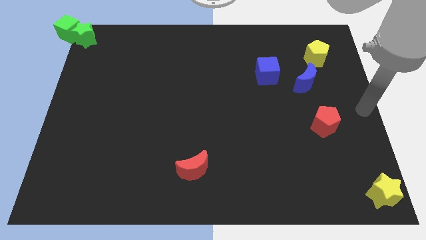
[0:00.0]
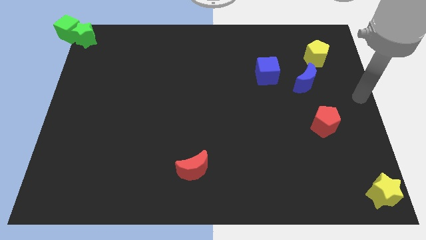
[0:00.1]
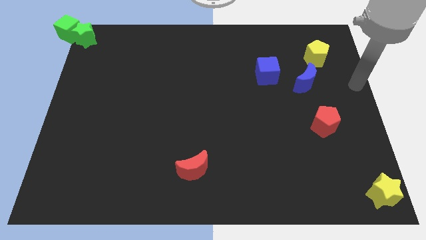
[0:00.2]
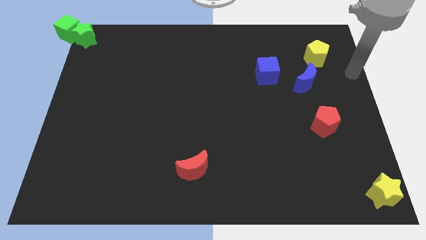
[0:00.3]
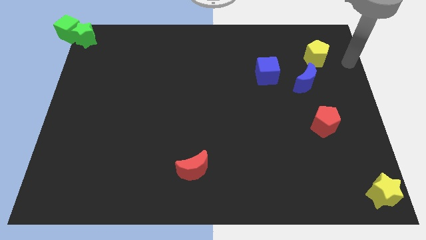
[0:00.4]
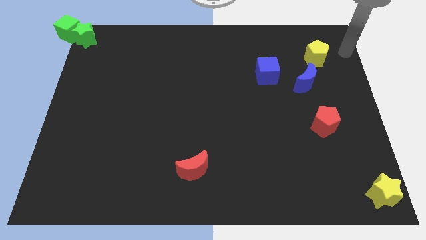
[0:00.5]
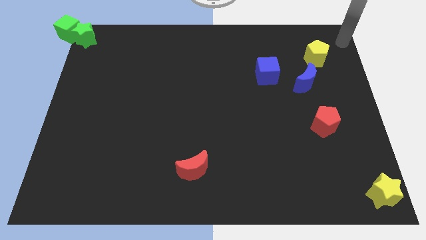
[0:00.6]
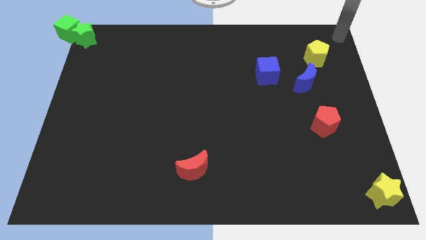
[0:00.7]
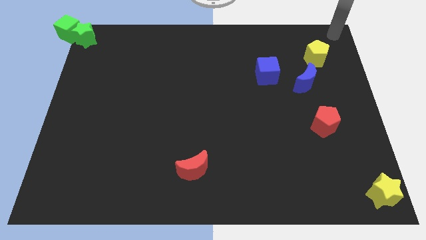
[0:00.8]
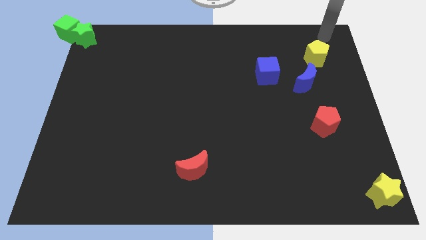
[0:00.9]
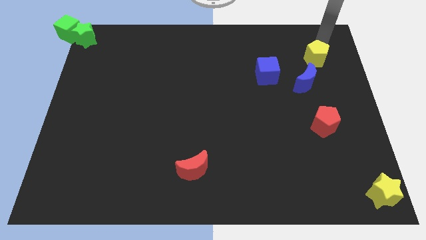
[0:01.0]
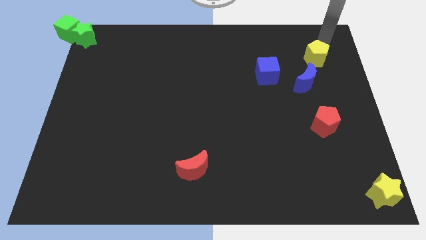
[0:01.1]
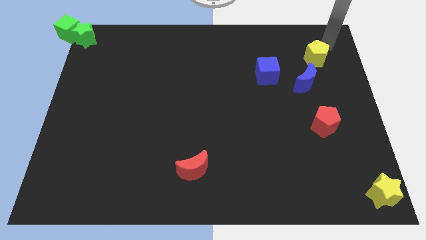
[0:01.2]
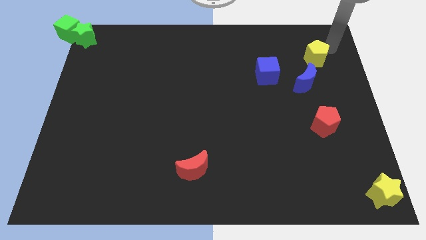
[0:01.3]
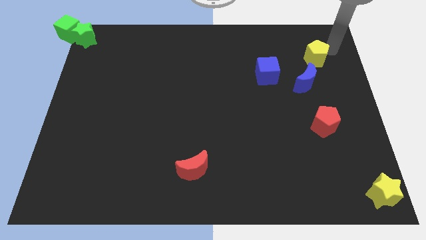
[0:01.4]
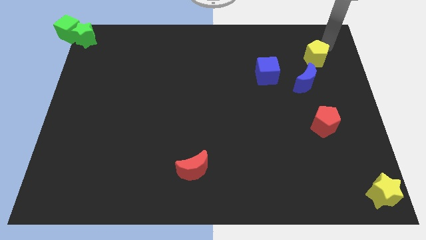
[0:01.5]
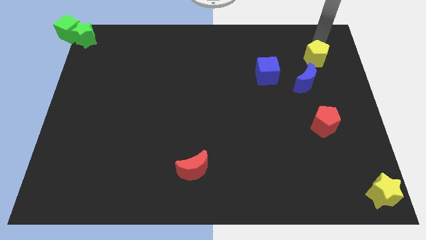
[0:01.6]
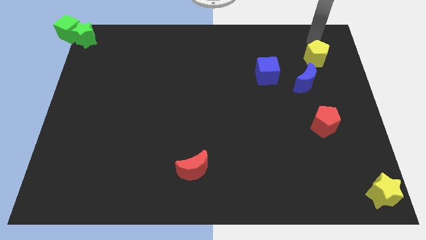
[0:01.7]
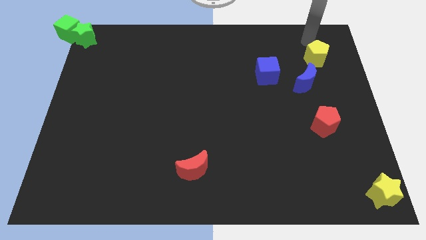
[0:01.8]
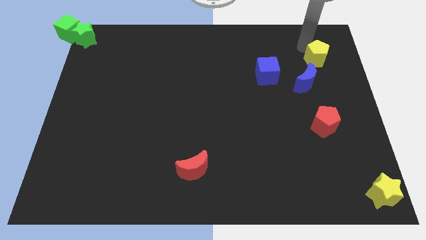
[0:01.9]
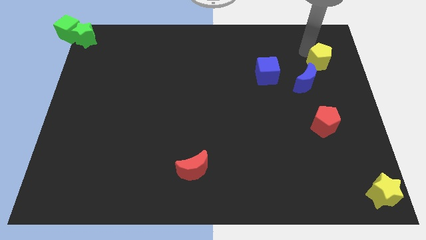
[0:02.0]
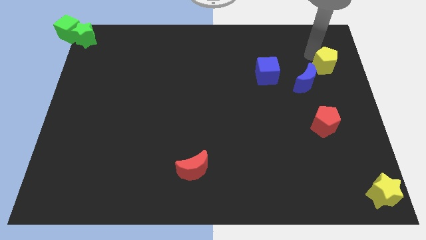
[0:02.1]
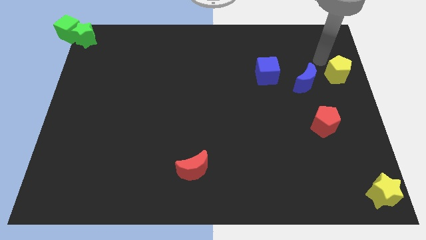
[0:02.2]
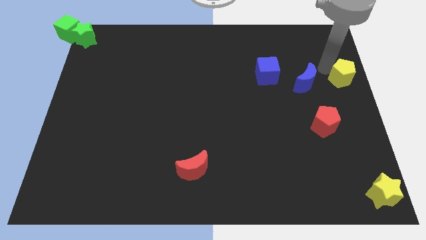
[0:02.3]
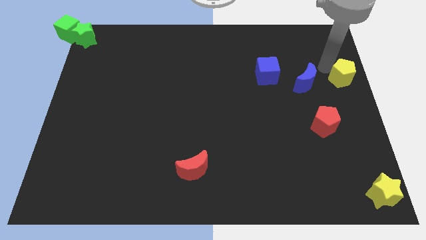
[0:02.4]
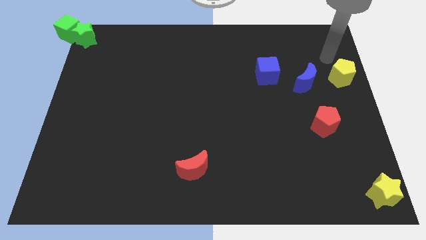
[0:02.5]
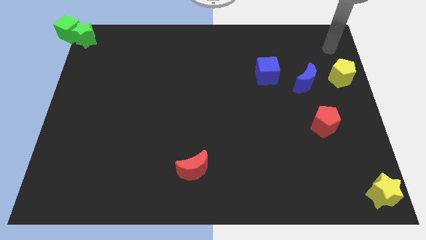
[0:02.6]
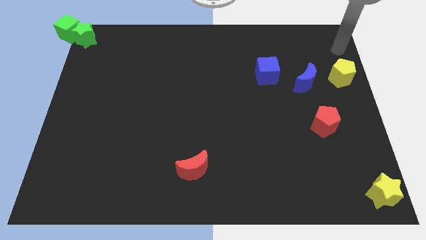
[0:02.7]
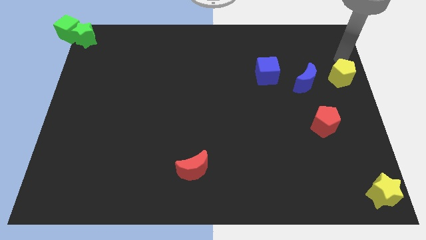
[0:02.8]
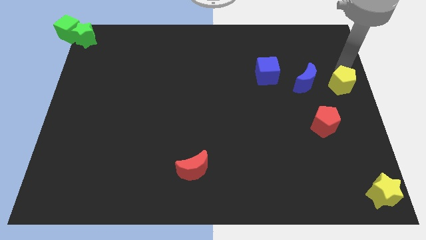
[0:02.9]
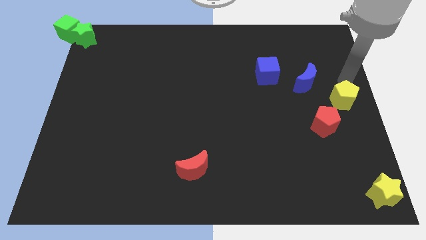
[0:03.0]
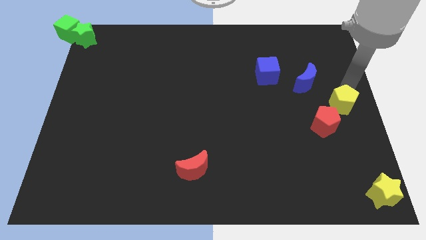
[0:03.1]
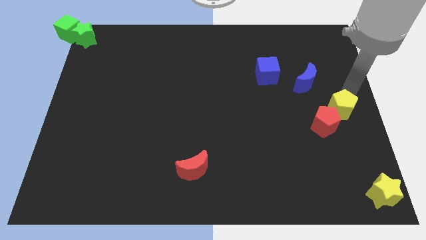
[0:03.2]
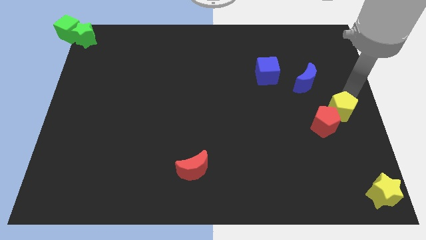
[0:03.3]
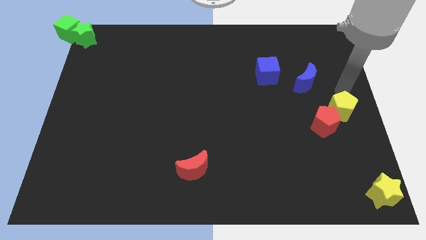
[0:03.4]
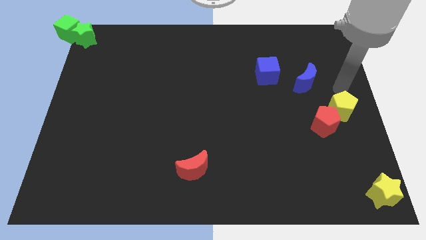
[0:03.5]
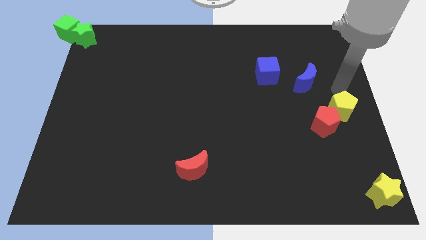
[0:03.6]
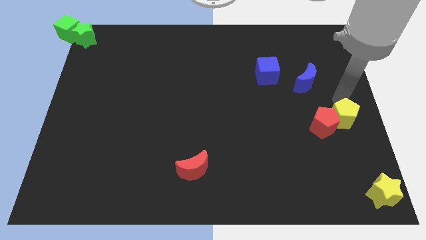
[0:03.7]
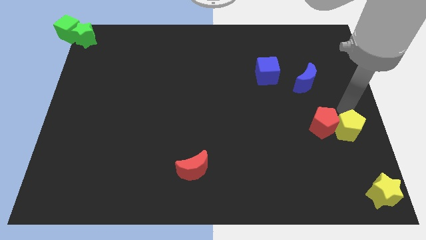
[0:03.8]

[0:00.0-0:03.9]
push the yellow pentagon to the right of the red pentagon

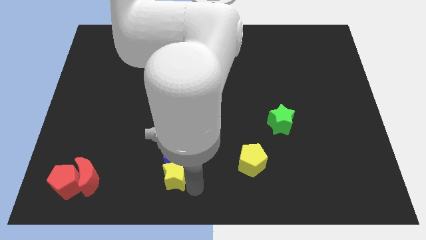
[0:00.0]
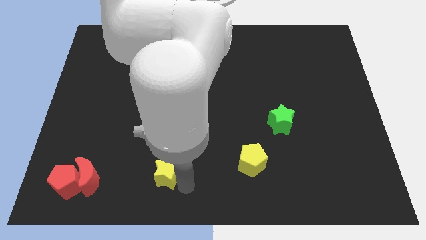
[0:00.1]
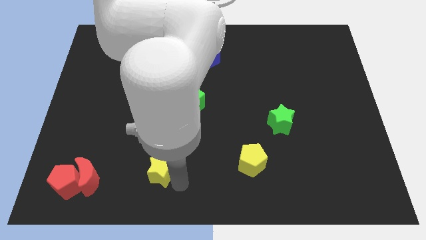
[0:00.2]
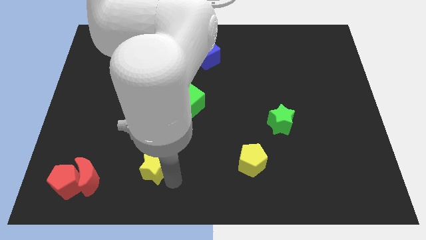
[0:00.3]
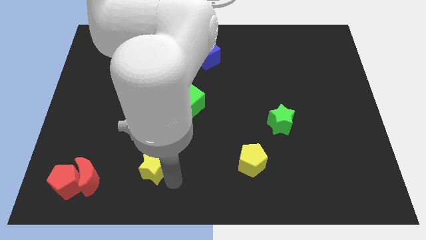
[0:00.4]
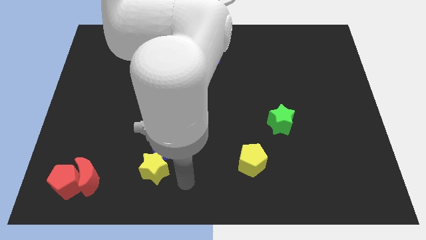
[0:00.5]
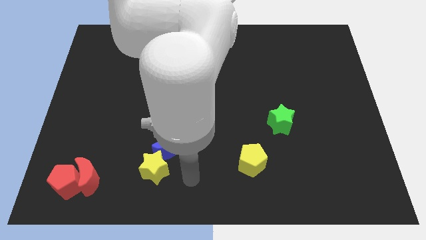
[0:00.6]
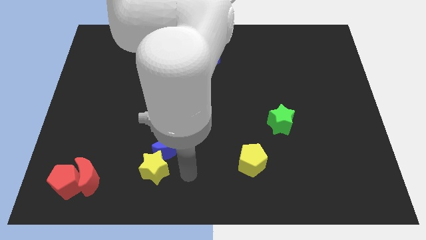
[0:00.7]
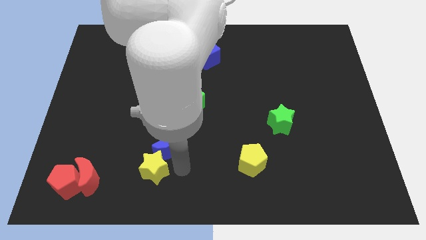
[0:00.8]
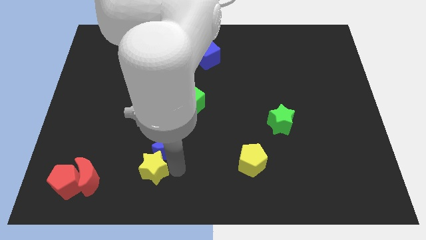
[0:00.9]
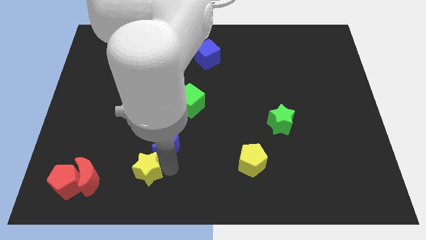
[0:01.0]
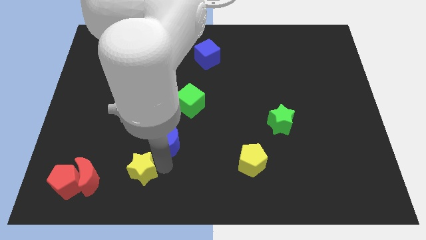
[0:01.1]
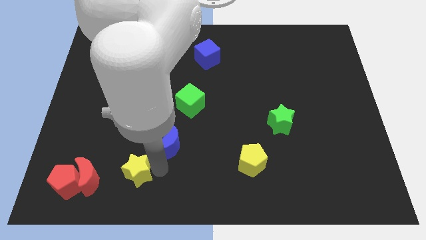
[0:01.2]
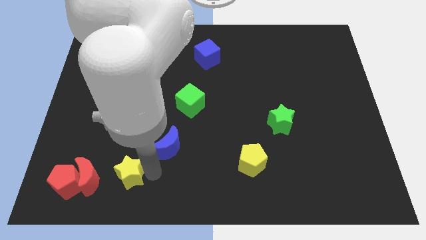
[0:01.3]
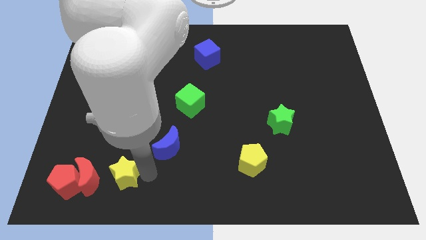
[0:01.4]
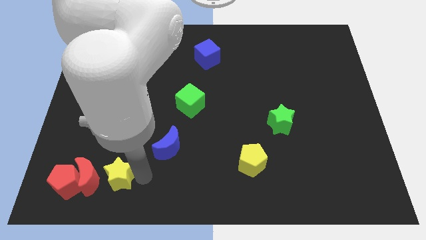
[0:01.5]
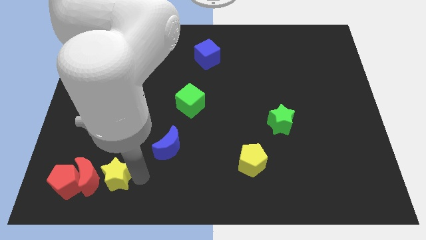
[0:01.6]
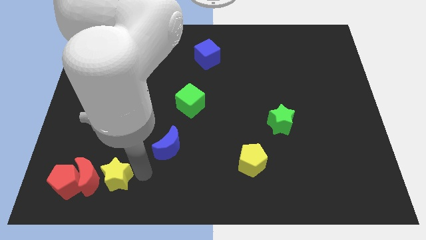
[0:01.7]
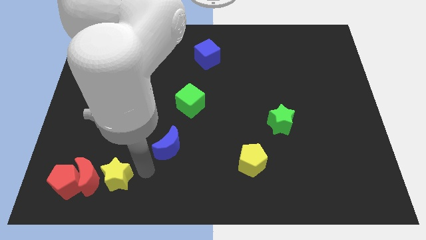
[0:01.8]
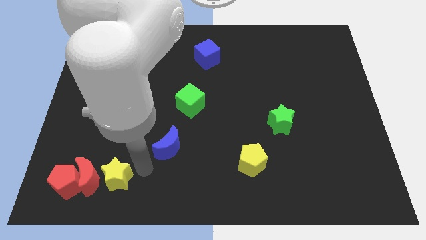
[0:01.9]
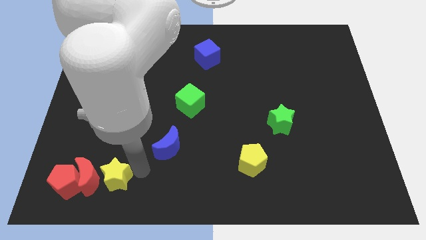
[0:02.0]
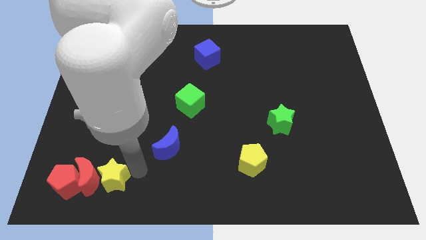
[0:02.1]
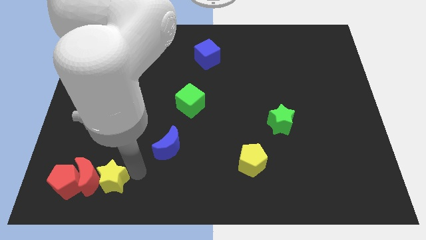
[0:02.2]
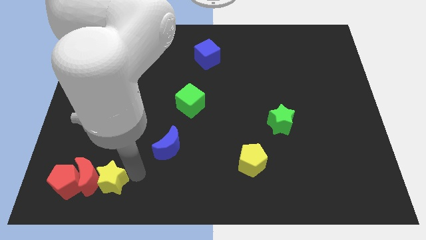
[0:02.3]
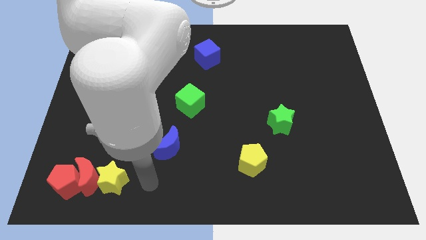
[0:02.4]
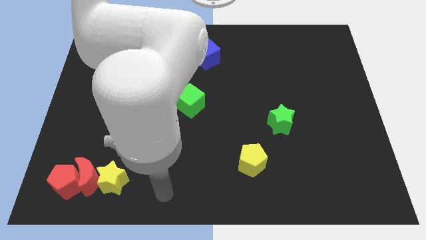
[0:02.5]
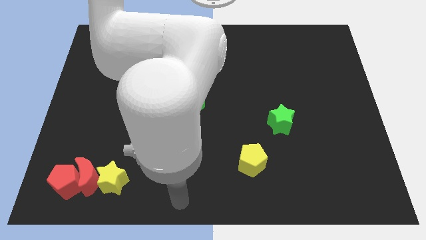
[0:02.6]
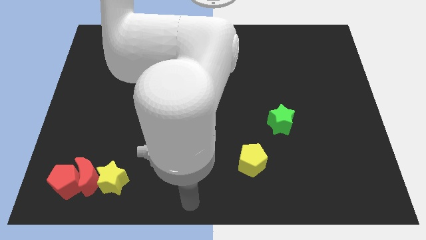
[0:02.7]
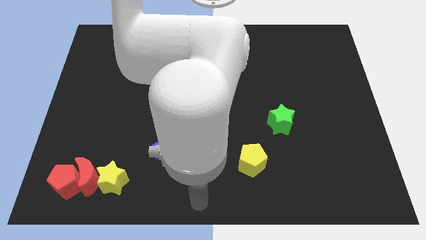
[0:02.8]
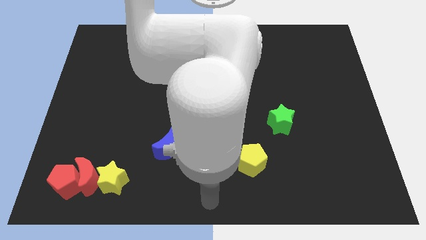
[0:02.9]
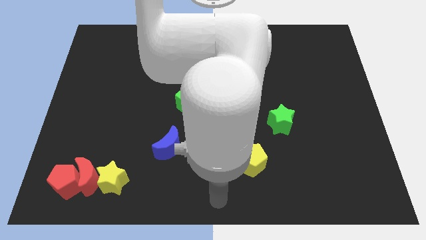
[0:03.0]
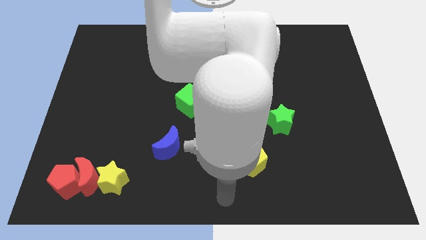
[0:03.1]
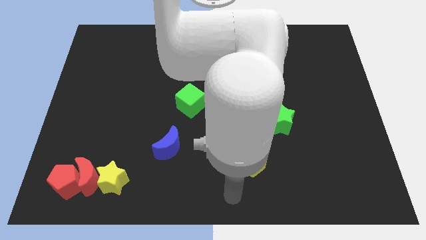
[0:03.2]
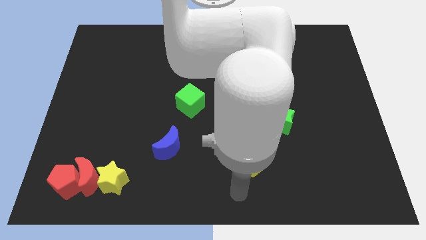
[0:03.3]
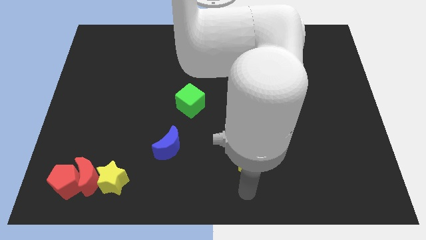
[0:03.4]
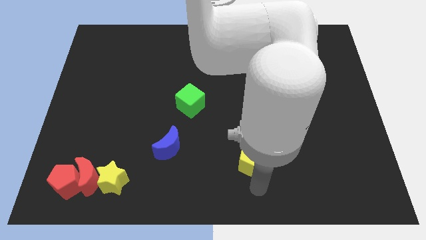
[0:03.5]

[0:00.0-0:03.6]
push the yellow star right to the red moon

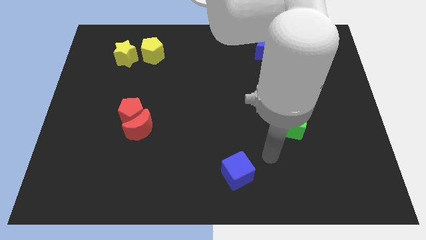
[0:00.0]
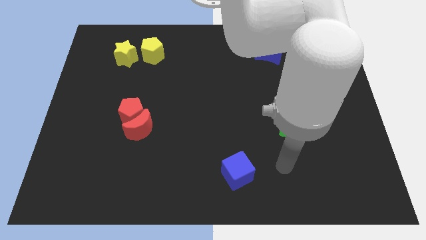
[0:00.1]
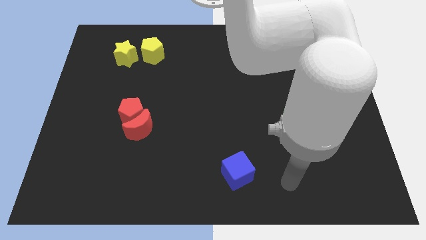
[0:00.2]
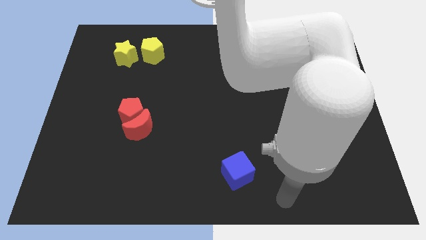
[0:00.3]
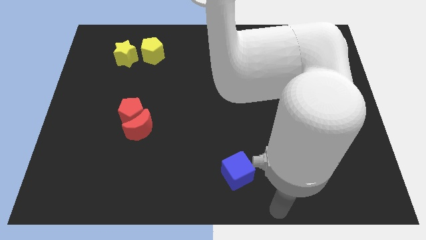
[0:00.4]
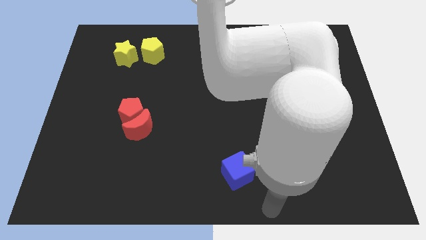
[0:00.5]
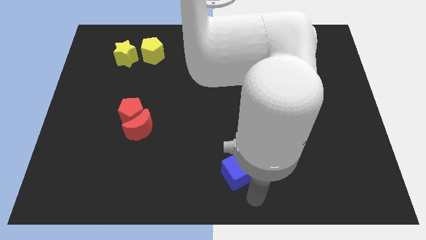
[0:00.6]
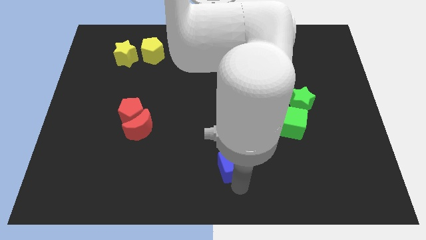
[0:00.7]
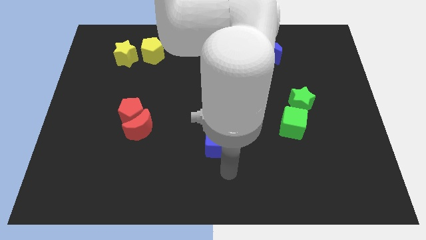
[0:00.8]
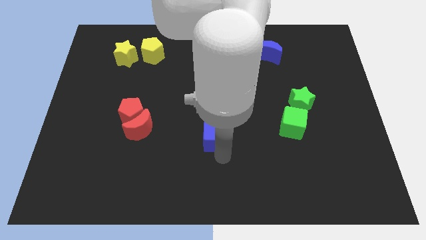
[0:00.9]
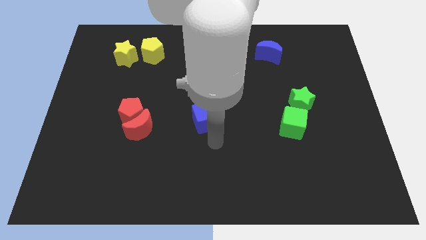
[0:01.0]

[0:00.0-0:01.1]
put the blue cube in between the group of red and green blocks

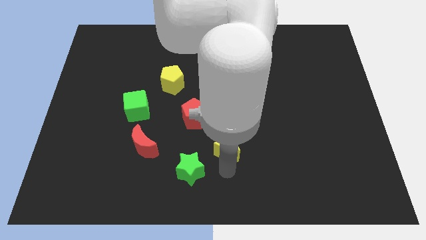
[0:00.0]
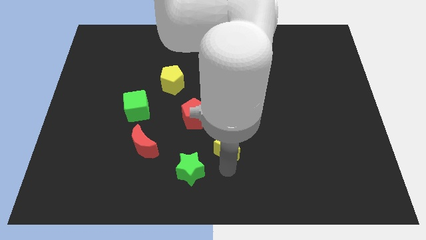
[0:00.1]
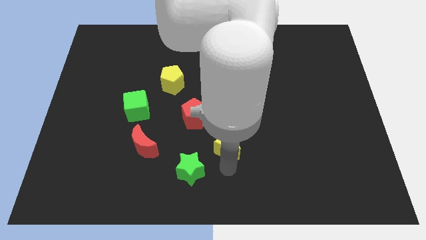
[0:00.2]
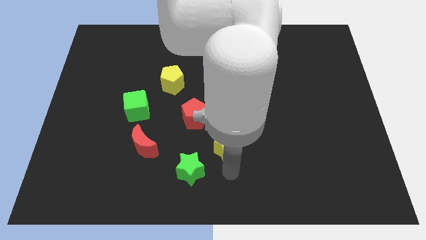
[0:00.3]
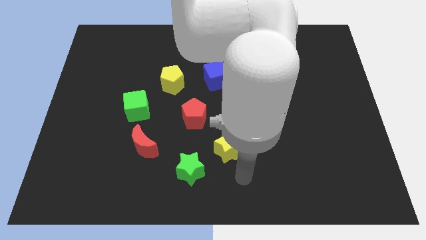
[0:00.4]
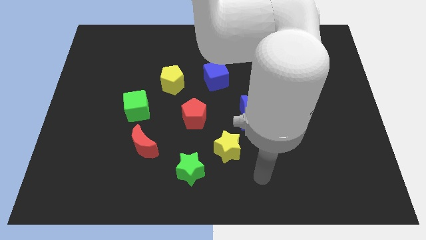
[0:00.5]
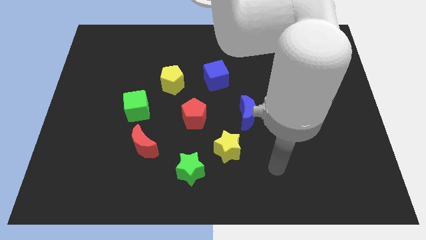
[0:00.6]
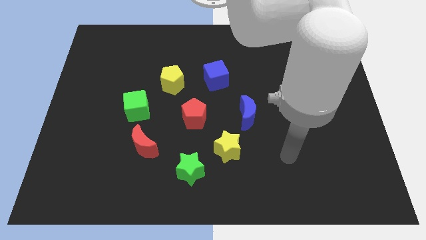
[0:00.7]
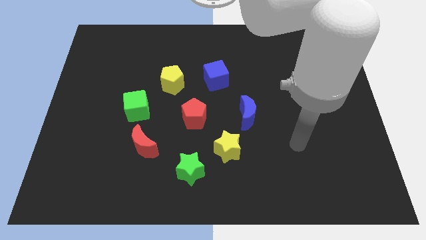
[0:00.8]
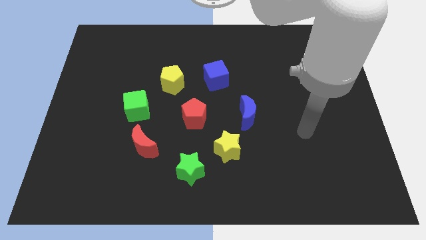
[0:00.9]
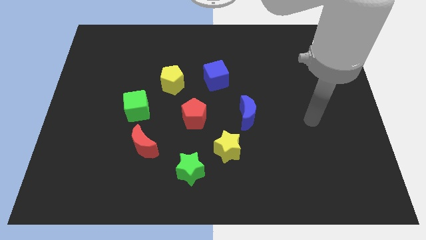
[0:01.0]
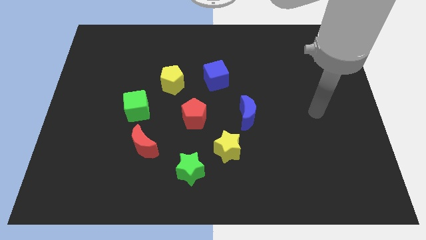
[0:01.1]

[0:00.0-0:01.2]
move your arm away from the yellow star
